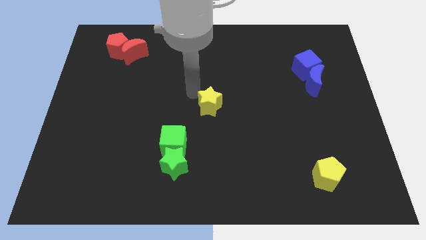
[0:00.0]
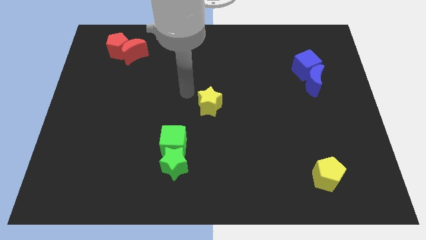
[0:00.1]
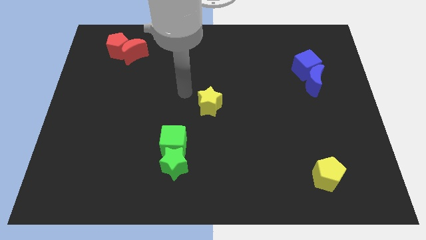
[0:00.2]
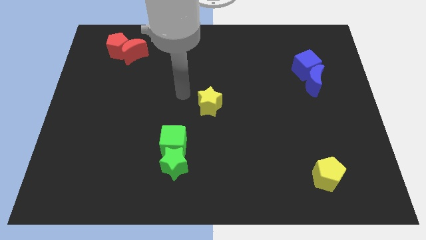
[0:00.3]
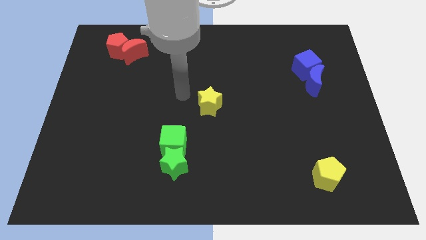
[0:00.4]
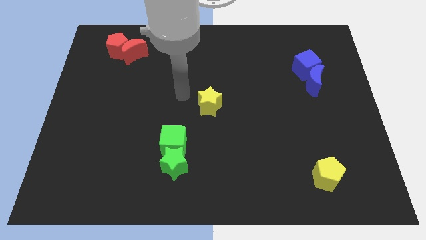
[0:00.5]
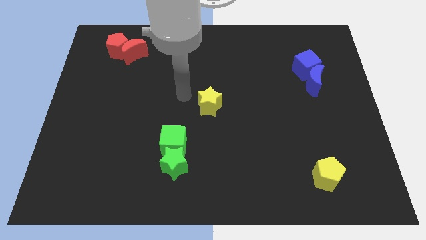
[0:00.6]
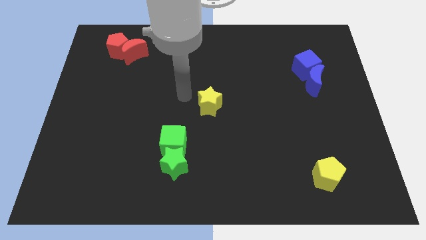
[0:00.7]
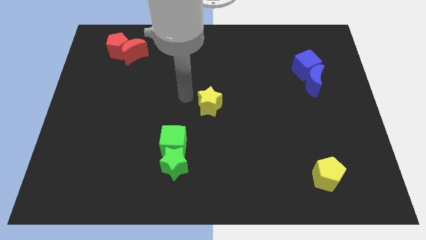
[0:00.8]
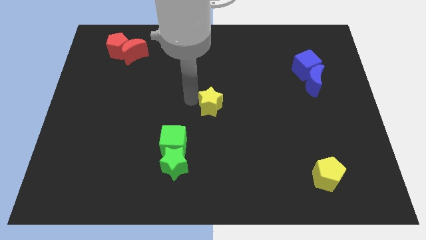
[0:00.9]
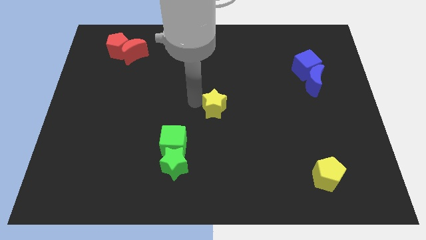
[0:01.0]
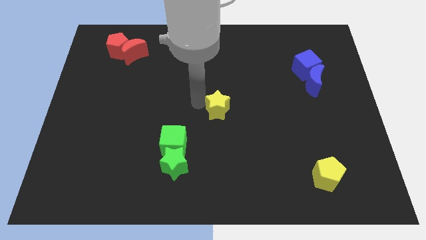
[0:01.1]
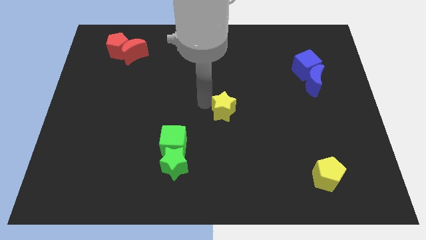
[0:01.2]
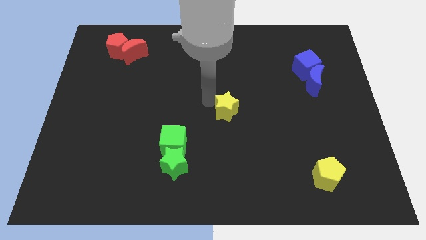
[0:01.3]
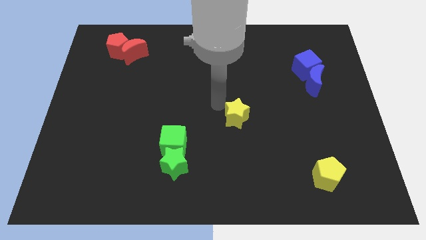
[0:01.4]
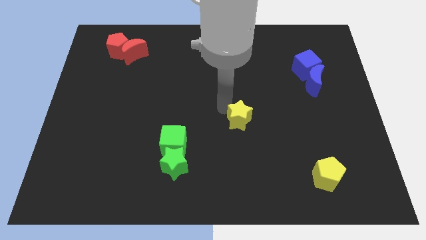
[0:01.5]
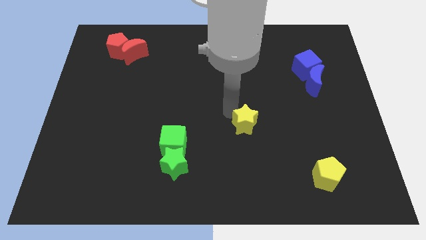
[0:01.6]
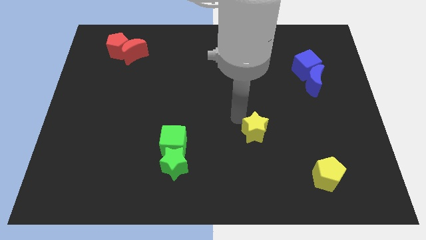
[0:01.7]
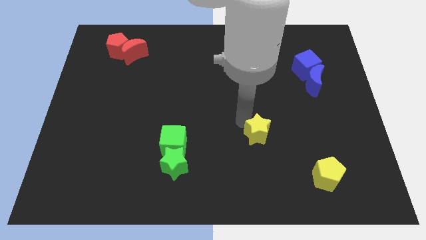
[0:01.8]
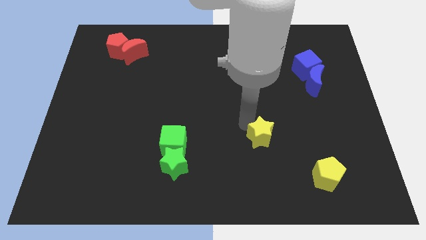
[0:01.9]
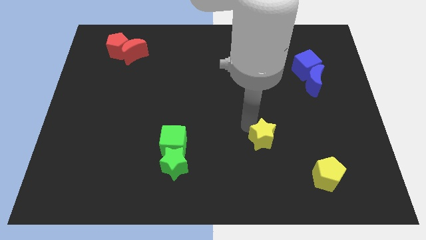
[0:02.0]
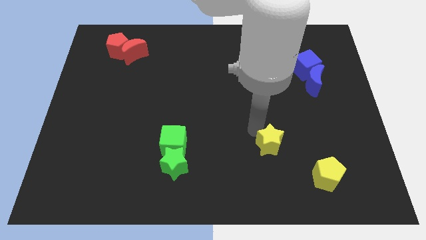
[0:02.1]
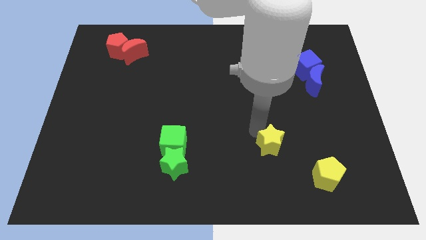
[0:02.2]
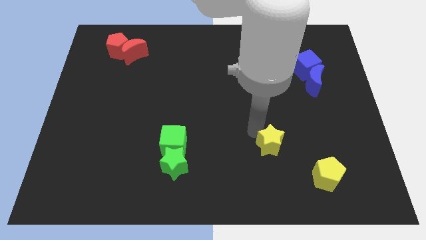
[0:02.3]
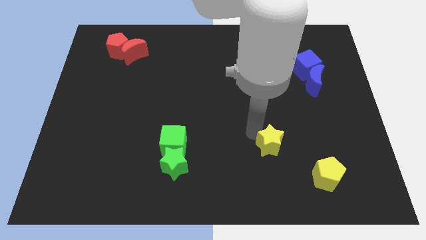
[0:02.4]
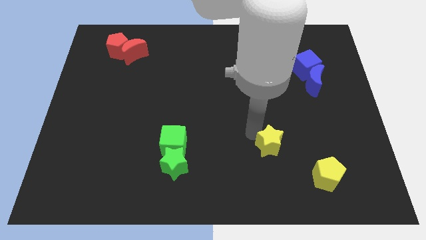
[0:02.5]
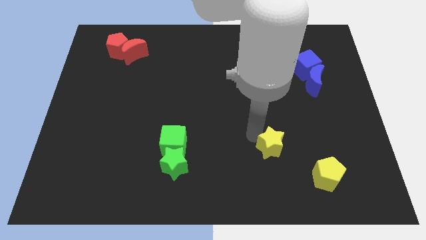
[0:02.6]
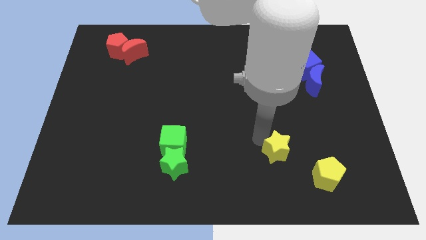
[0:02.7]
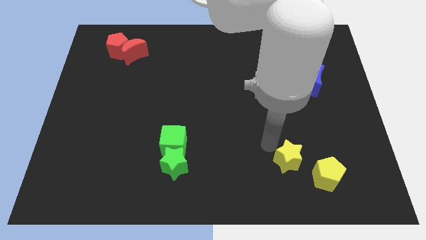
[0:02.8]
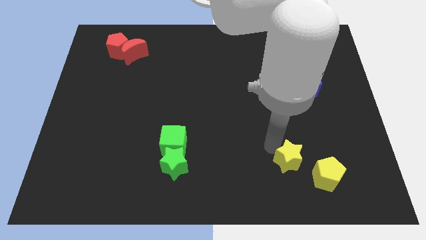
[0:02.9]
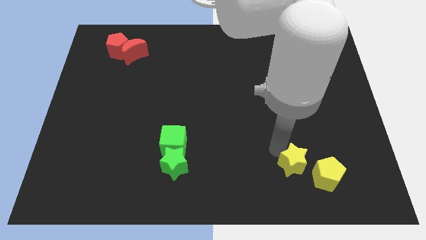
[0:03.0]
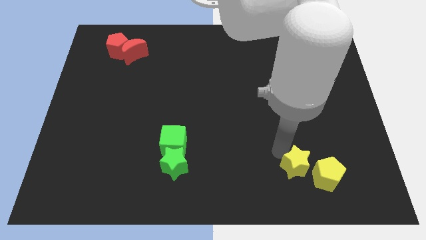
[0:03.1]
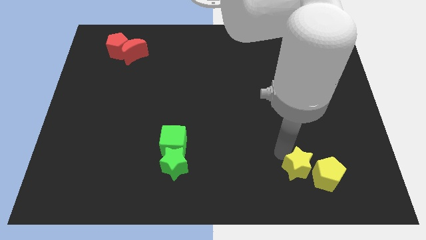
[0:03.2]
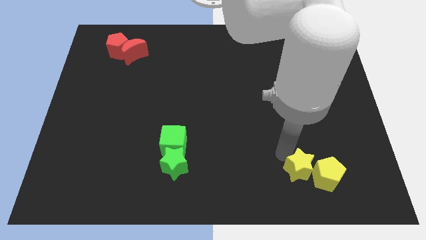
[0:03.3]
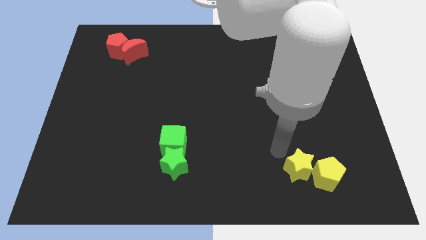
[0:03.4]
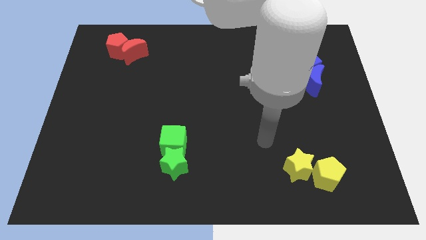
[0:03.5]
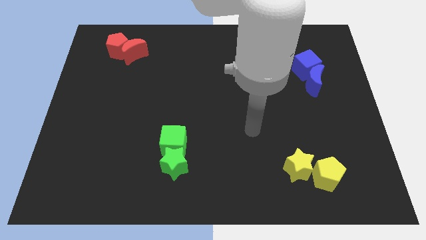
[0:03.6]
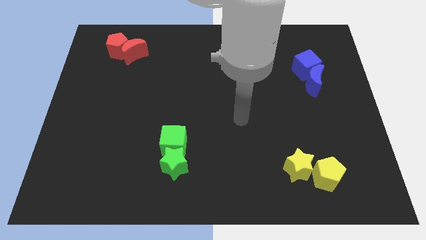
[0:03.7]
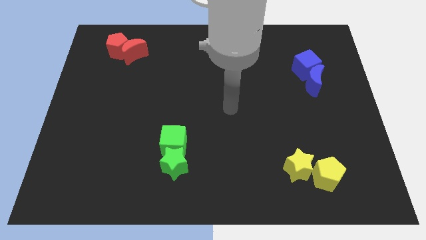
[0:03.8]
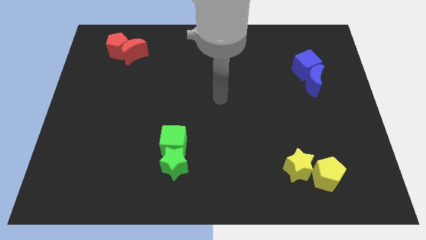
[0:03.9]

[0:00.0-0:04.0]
push the yellow star into the yellow pentagon

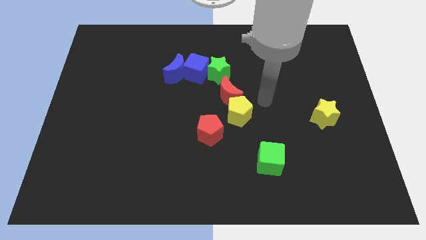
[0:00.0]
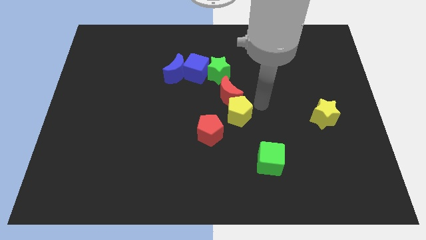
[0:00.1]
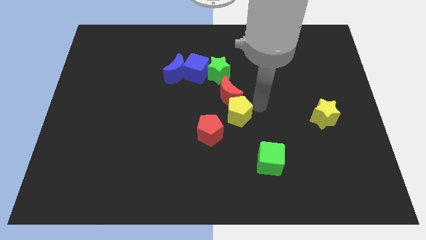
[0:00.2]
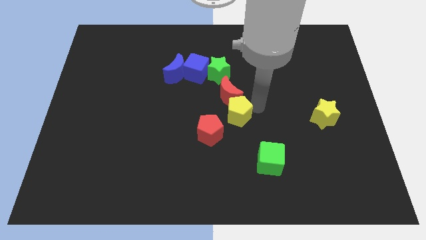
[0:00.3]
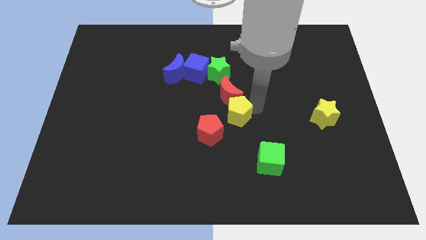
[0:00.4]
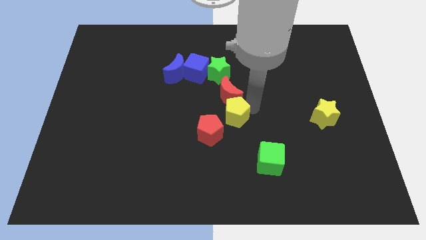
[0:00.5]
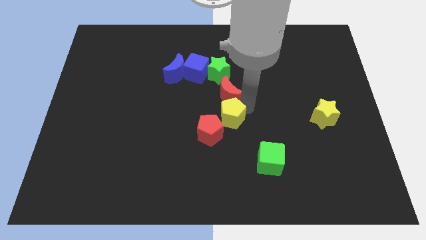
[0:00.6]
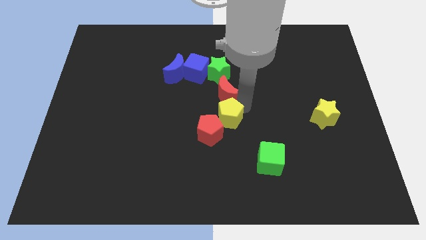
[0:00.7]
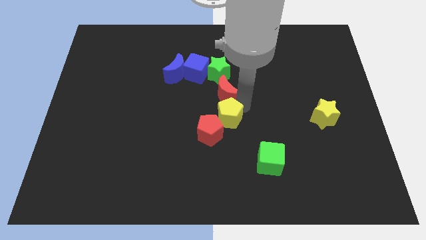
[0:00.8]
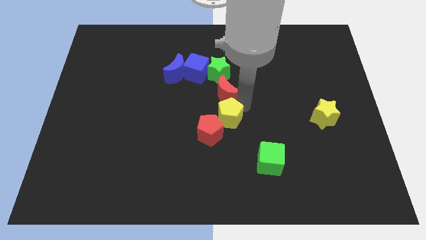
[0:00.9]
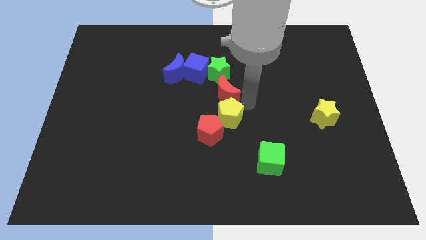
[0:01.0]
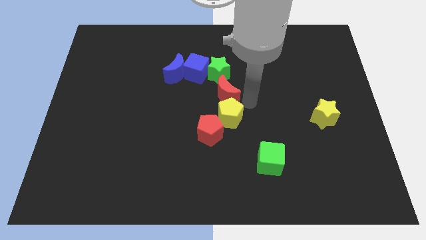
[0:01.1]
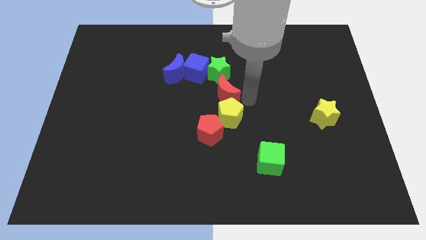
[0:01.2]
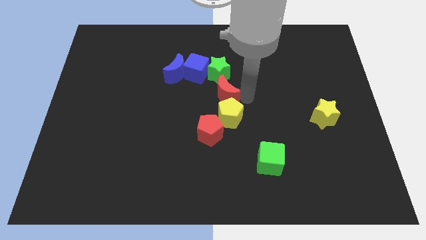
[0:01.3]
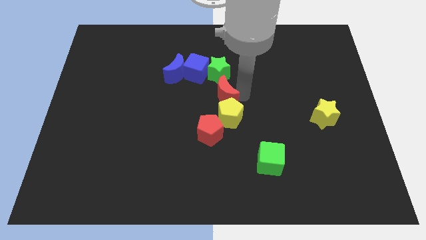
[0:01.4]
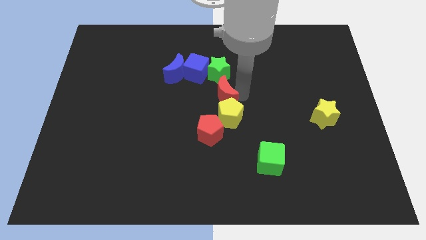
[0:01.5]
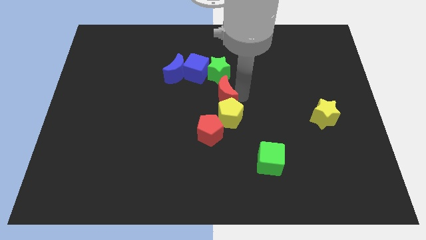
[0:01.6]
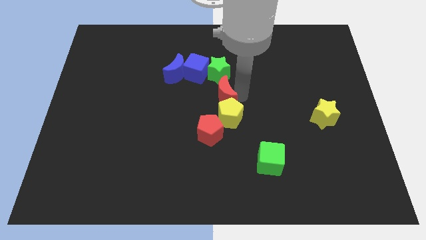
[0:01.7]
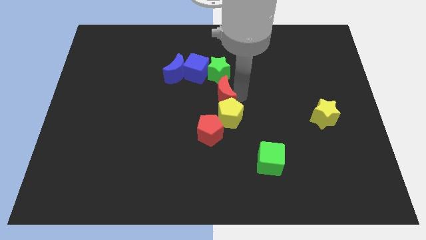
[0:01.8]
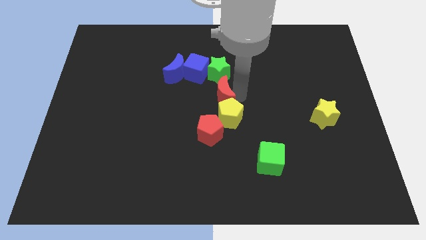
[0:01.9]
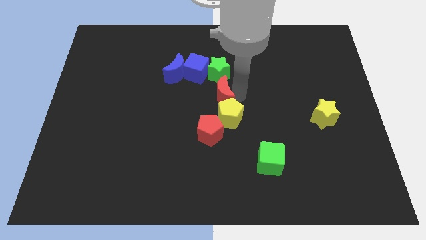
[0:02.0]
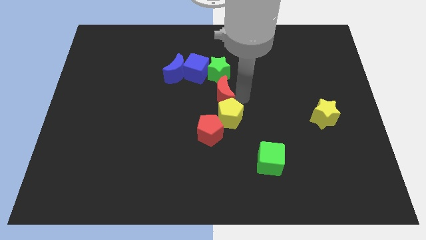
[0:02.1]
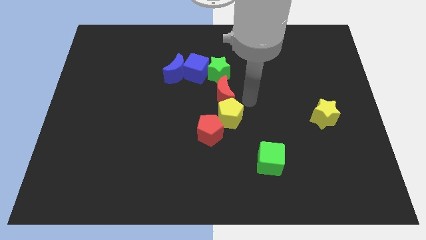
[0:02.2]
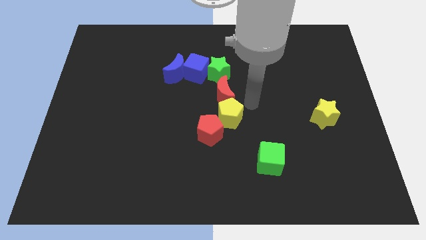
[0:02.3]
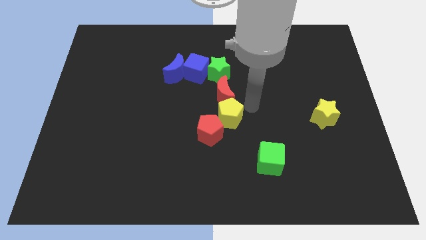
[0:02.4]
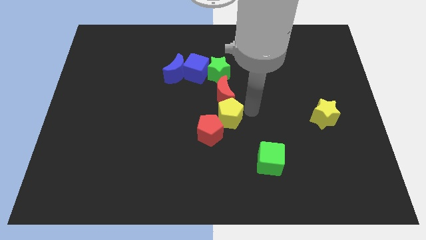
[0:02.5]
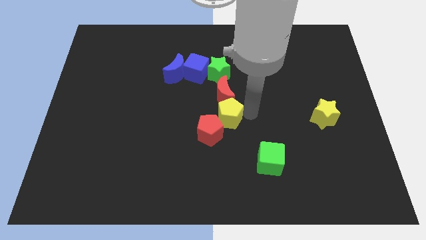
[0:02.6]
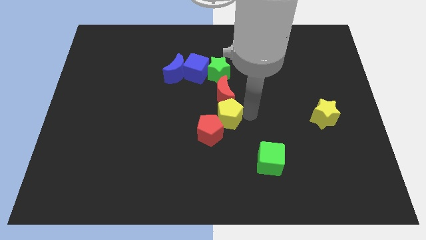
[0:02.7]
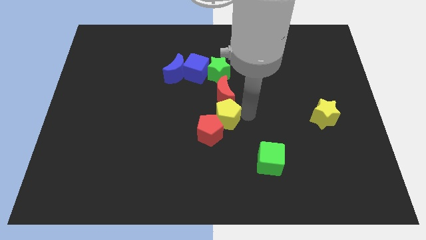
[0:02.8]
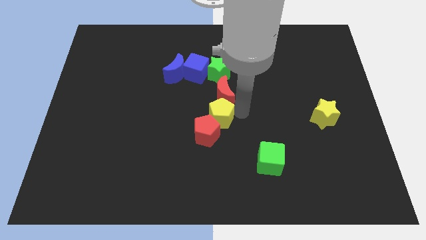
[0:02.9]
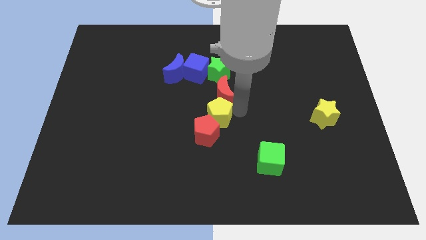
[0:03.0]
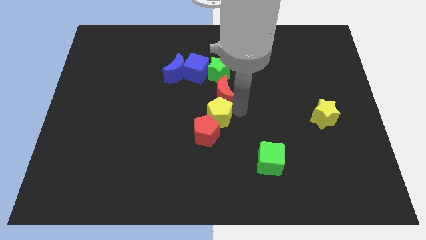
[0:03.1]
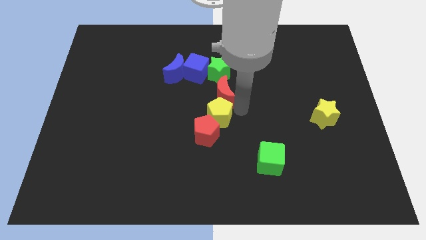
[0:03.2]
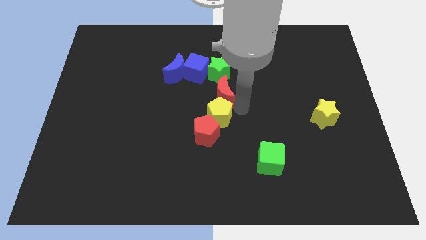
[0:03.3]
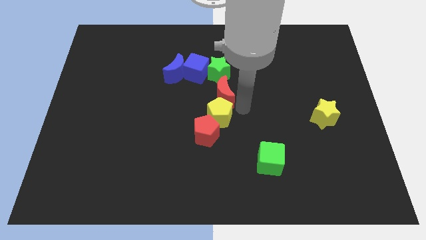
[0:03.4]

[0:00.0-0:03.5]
put the yellow pentagon into the red pentagon

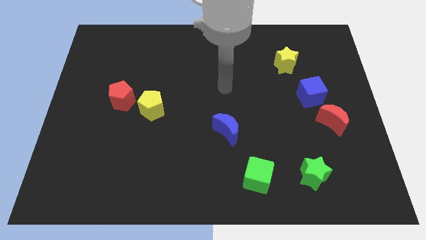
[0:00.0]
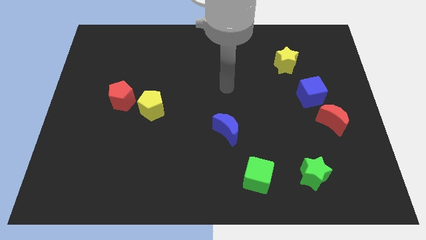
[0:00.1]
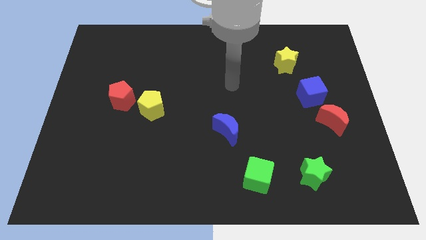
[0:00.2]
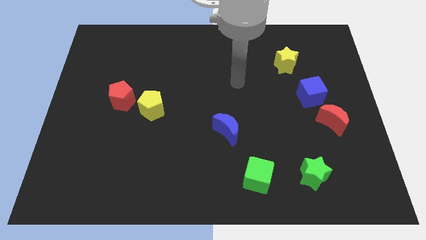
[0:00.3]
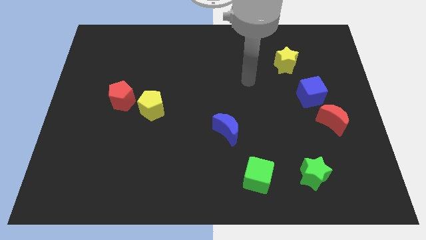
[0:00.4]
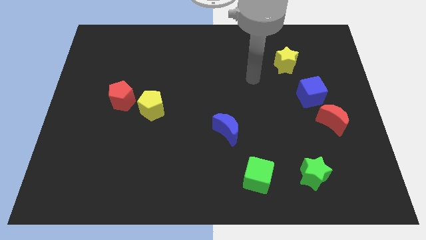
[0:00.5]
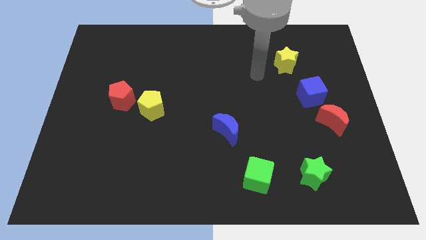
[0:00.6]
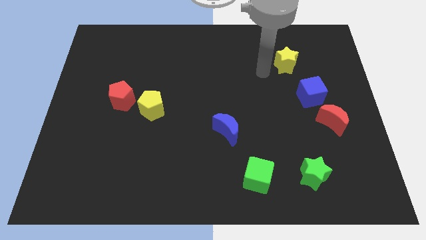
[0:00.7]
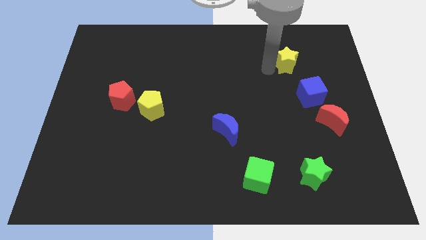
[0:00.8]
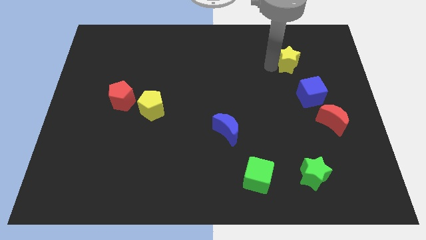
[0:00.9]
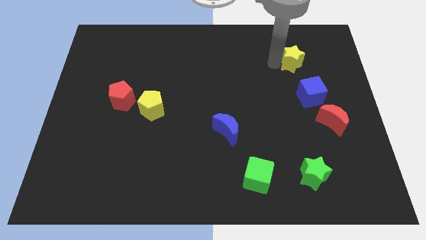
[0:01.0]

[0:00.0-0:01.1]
tap on the left side of yellow star

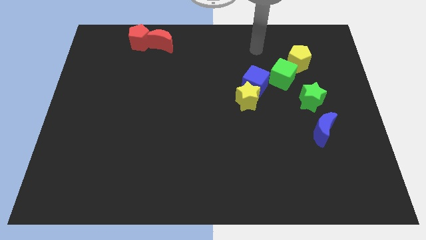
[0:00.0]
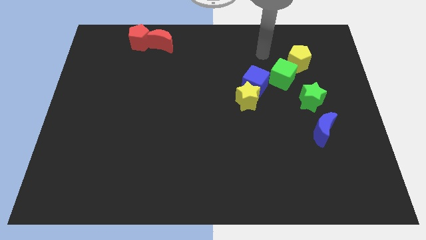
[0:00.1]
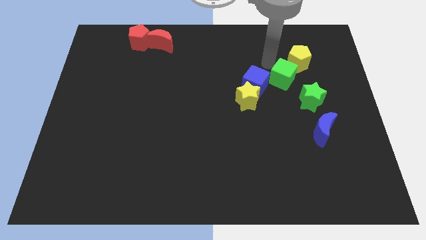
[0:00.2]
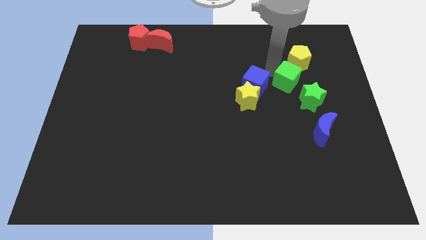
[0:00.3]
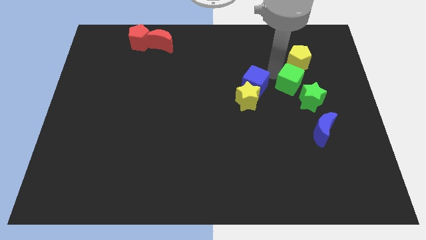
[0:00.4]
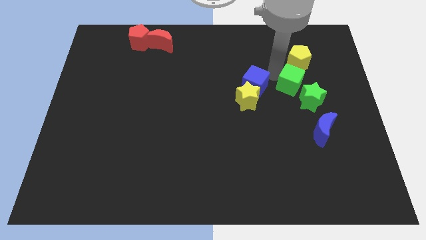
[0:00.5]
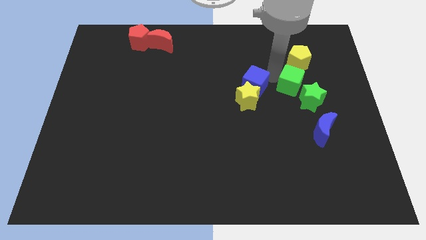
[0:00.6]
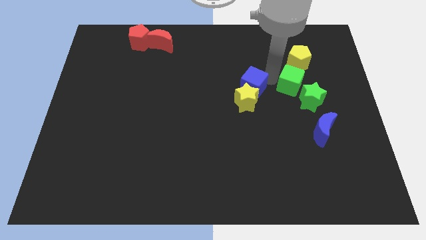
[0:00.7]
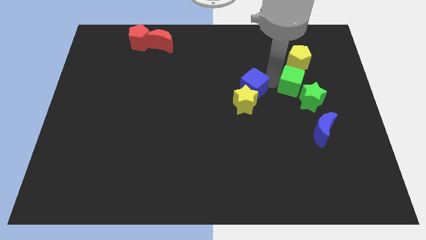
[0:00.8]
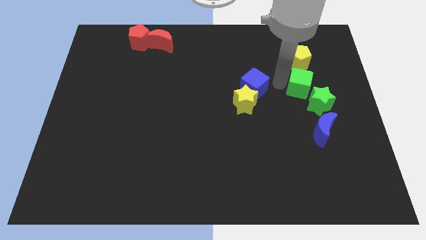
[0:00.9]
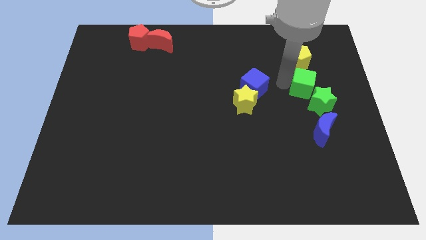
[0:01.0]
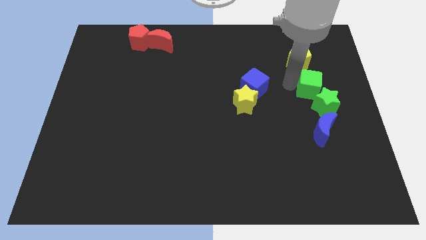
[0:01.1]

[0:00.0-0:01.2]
move the green cube into the green star
